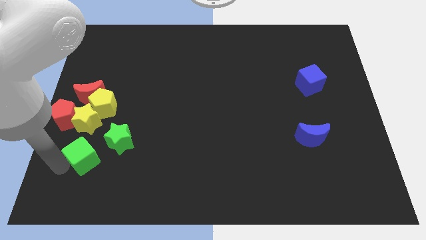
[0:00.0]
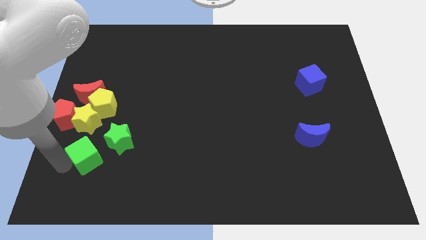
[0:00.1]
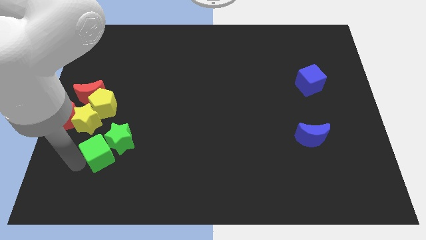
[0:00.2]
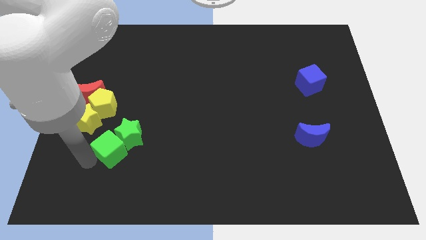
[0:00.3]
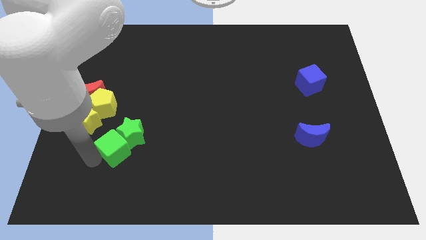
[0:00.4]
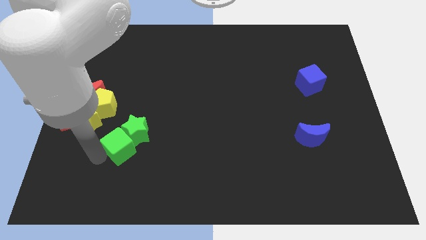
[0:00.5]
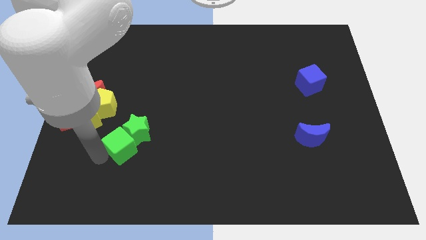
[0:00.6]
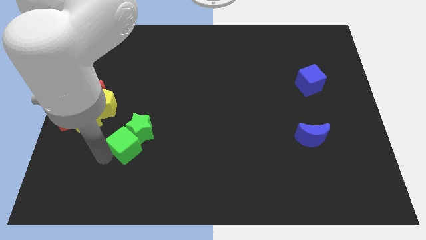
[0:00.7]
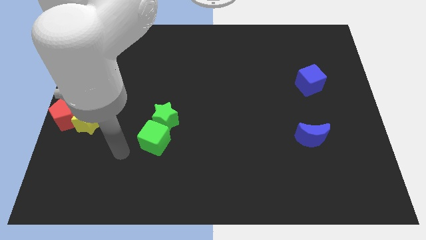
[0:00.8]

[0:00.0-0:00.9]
push the green cube into the green star

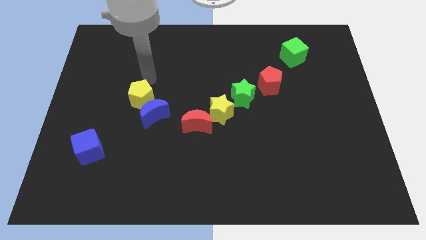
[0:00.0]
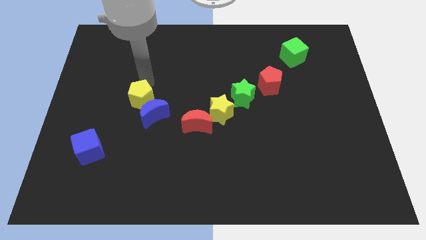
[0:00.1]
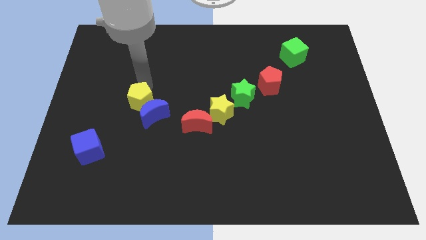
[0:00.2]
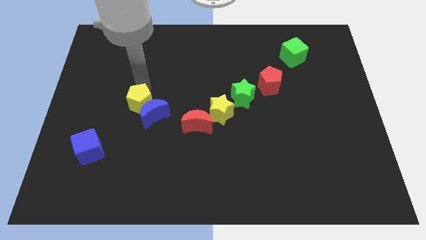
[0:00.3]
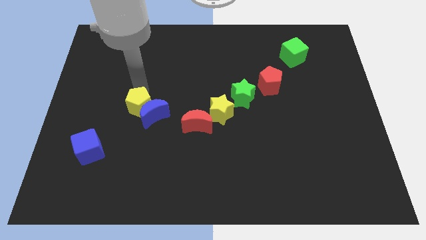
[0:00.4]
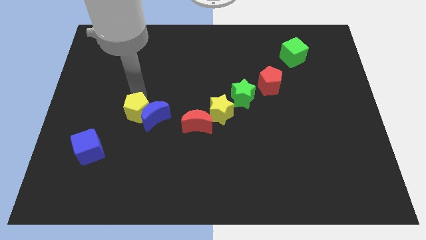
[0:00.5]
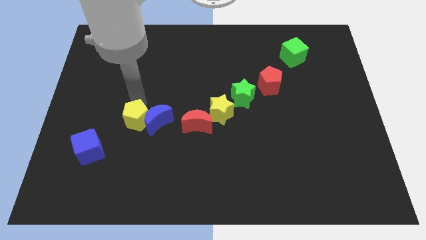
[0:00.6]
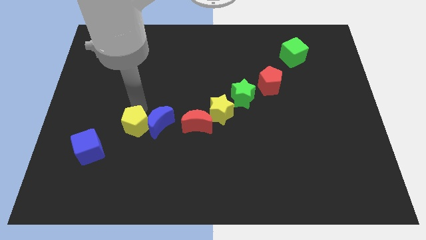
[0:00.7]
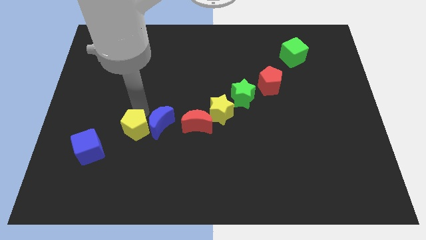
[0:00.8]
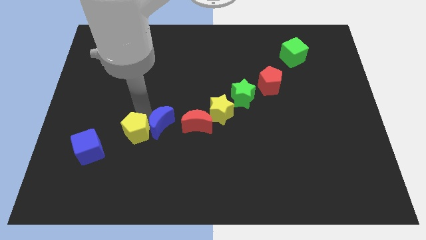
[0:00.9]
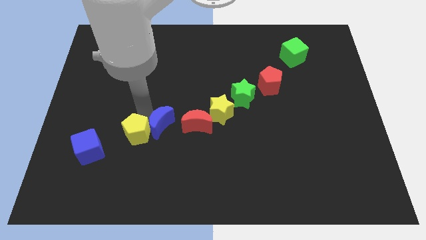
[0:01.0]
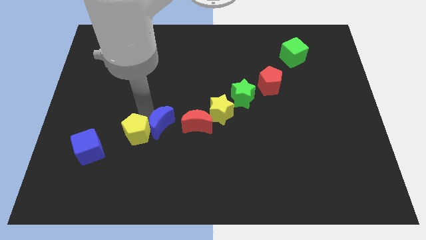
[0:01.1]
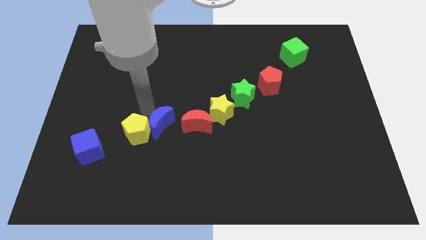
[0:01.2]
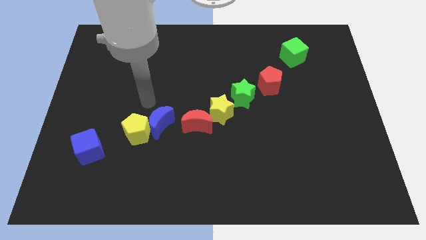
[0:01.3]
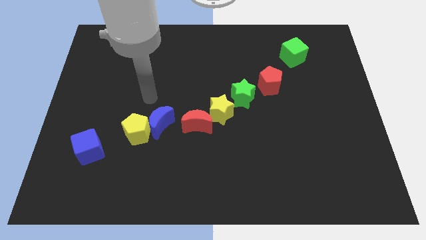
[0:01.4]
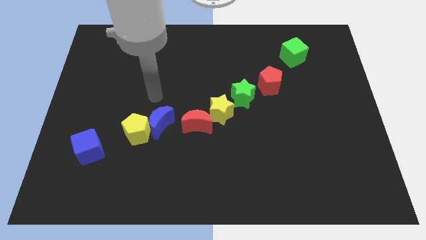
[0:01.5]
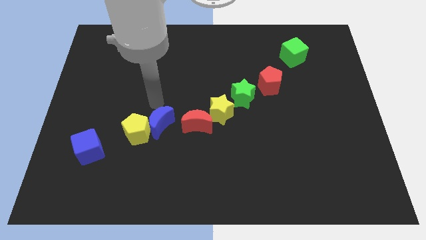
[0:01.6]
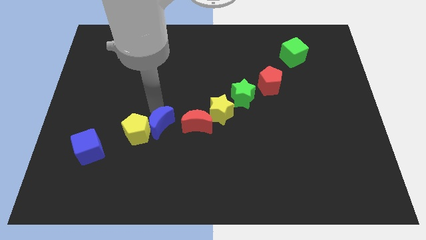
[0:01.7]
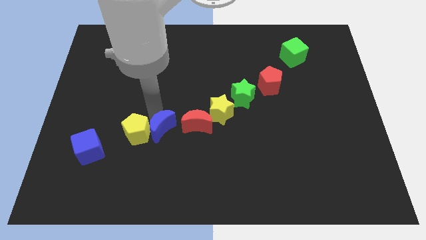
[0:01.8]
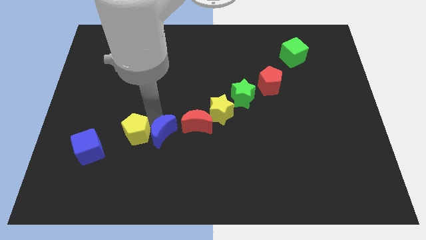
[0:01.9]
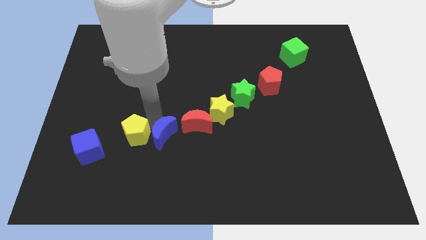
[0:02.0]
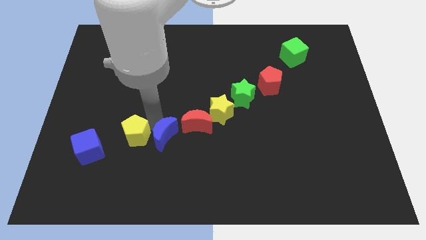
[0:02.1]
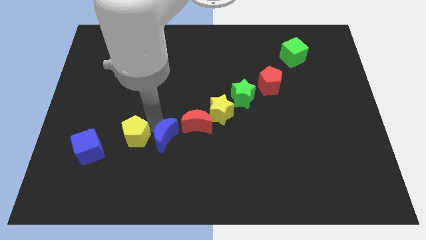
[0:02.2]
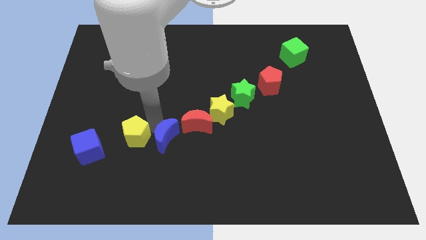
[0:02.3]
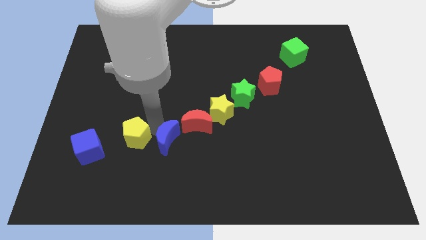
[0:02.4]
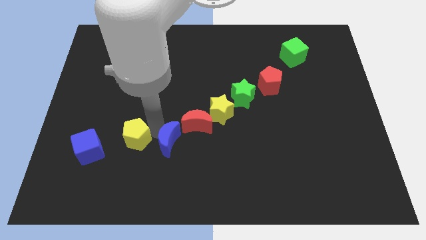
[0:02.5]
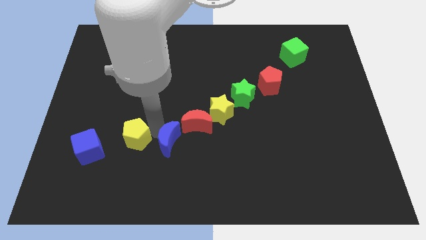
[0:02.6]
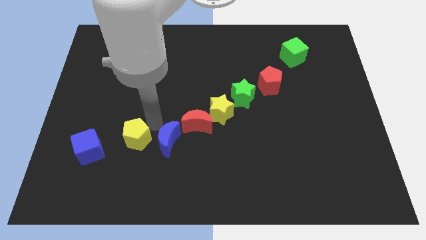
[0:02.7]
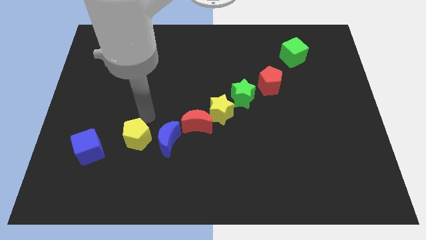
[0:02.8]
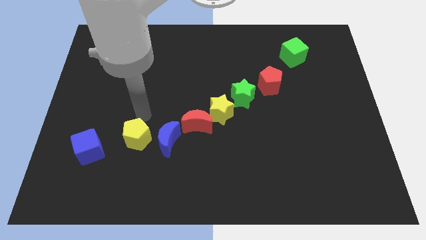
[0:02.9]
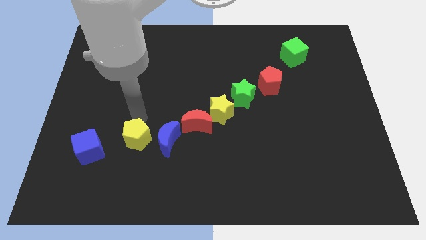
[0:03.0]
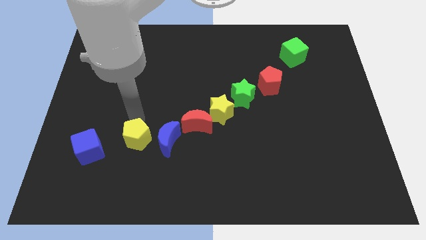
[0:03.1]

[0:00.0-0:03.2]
separate the yellow pentagon and the blue crescent

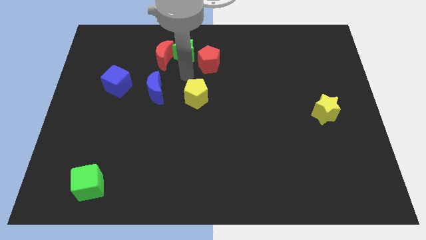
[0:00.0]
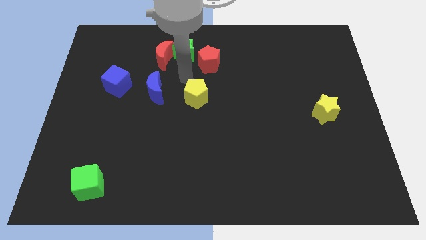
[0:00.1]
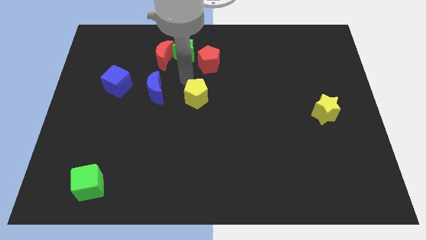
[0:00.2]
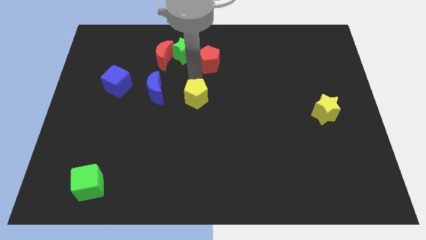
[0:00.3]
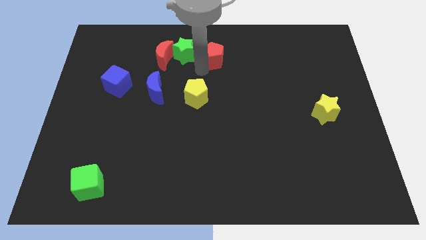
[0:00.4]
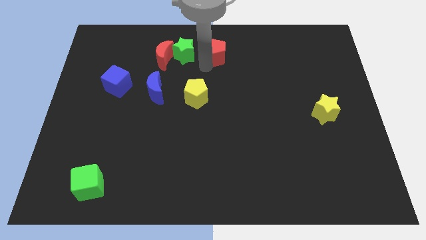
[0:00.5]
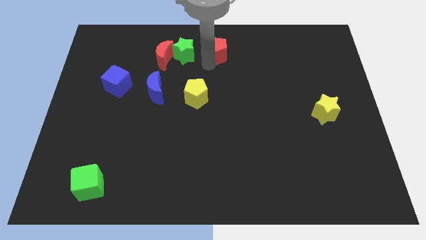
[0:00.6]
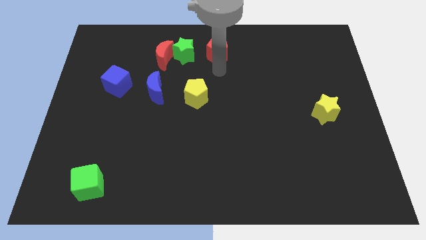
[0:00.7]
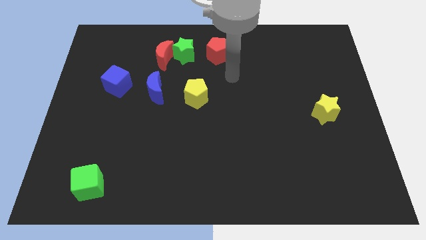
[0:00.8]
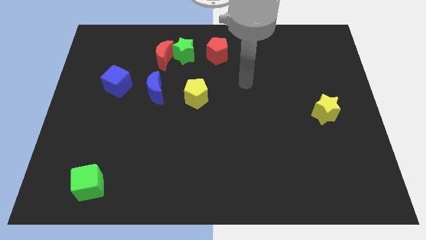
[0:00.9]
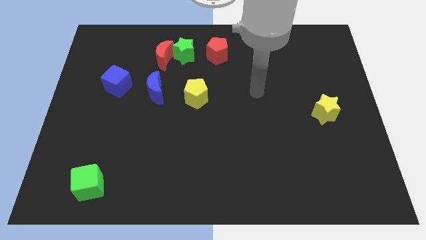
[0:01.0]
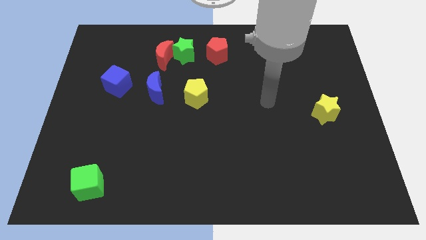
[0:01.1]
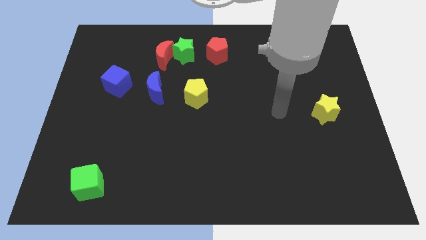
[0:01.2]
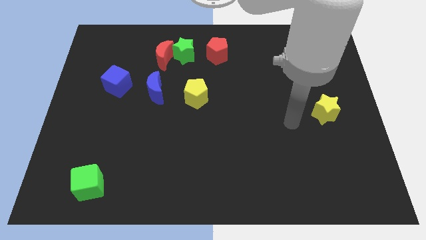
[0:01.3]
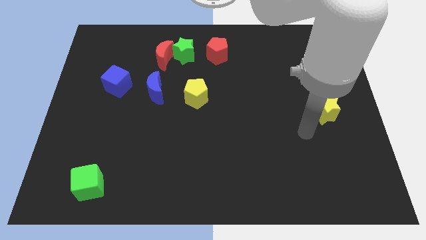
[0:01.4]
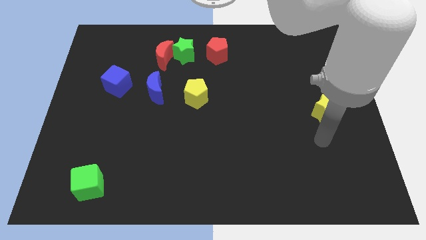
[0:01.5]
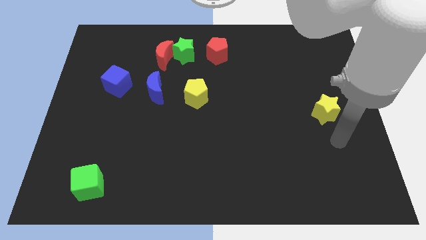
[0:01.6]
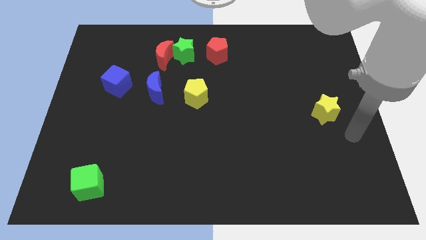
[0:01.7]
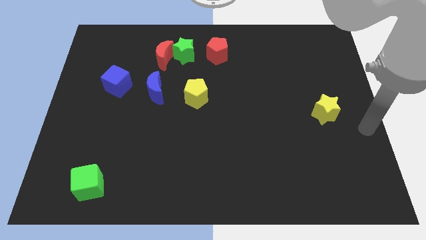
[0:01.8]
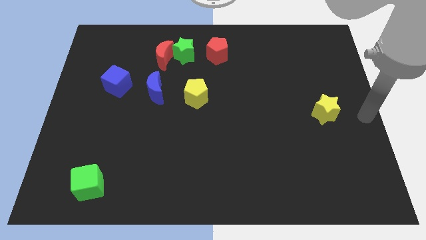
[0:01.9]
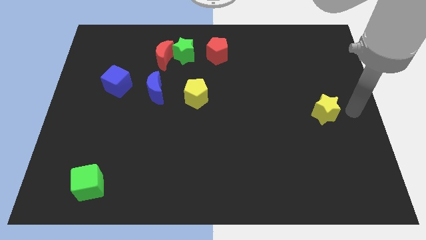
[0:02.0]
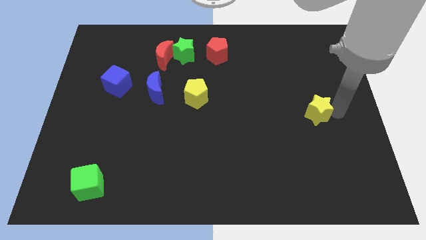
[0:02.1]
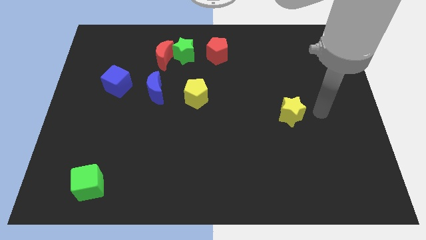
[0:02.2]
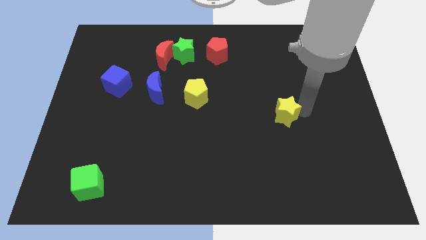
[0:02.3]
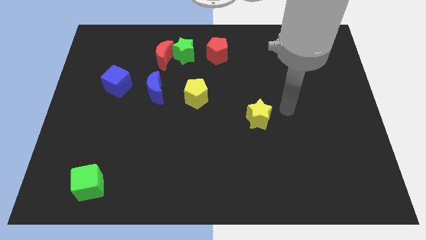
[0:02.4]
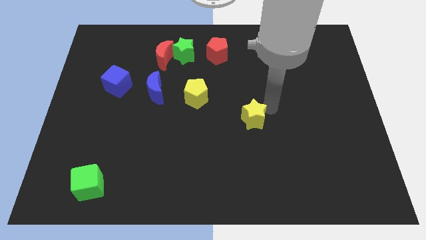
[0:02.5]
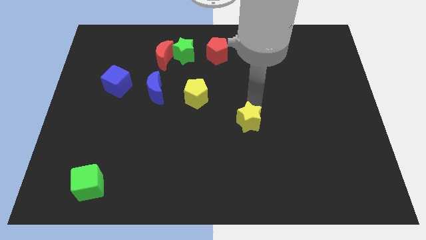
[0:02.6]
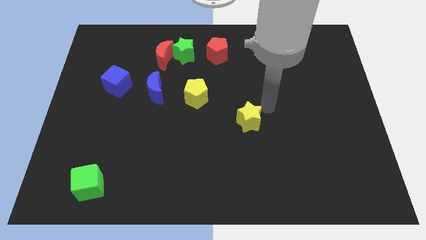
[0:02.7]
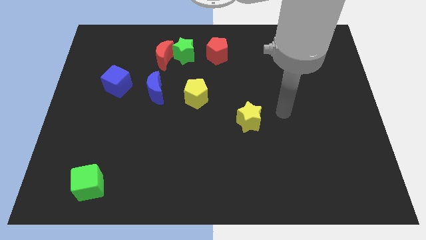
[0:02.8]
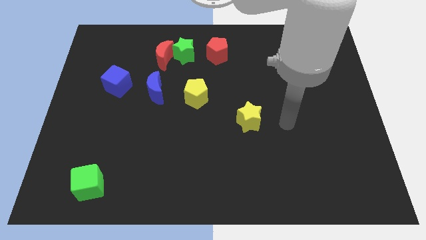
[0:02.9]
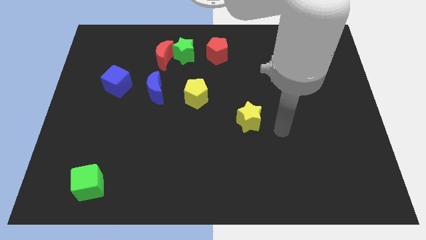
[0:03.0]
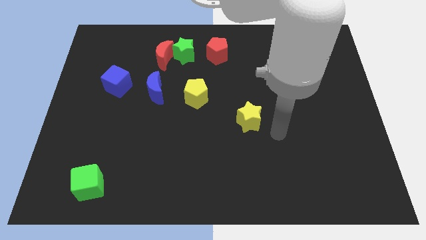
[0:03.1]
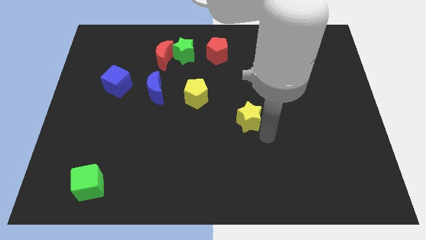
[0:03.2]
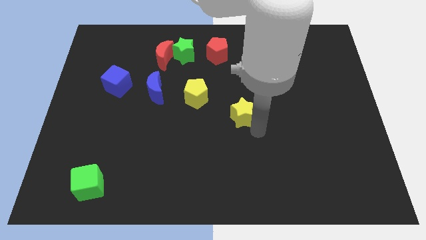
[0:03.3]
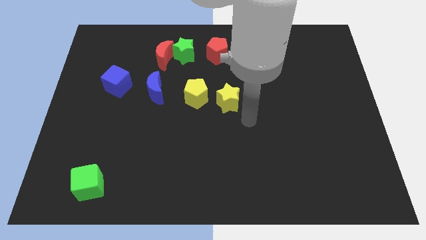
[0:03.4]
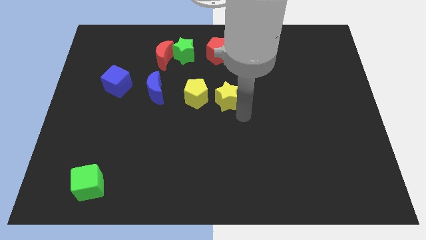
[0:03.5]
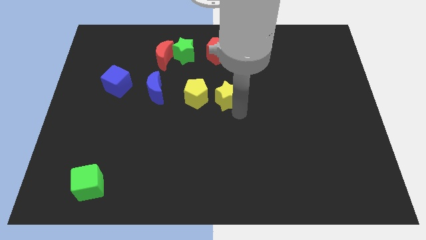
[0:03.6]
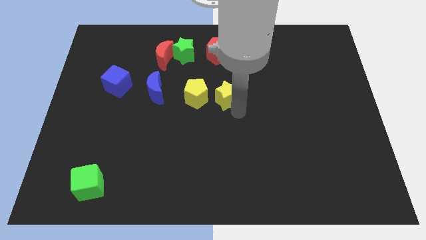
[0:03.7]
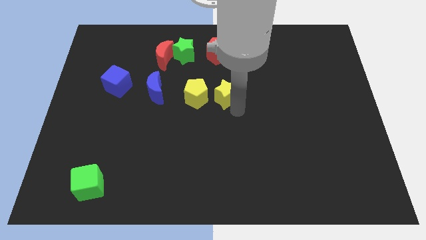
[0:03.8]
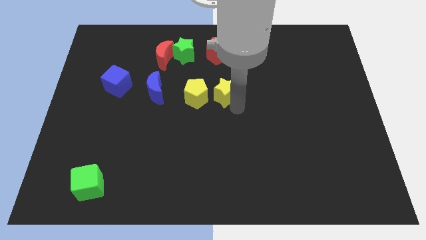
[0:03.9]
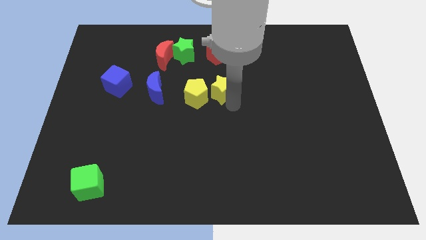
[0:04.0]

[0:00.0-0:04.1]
place the yellow star close to the right of the yellow pentagon

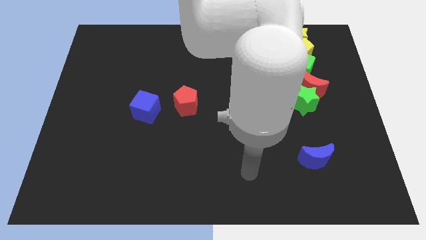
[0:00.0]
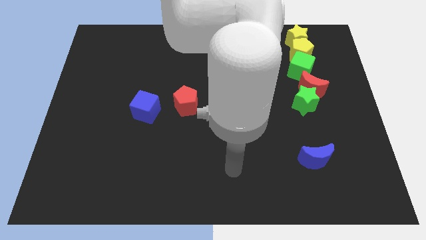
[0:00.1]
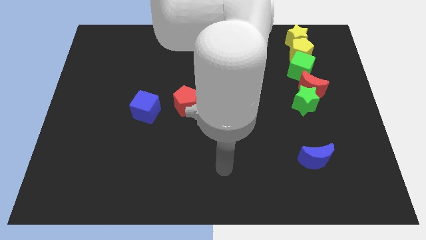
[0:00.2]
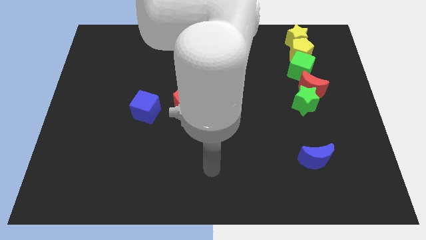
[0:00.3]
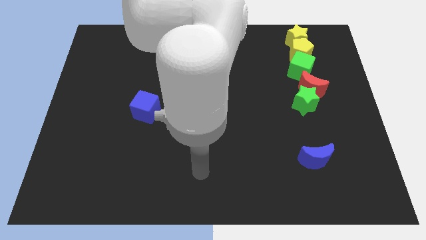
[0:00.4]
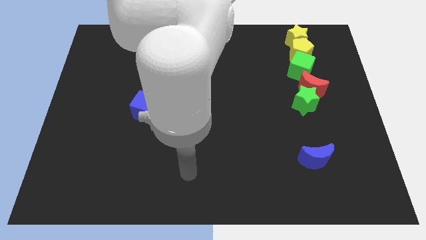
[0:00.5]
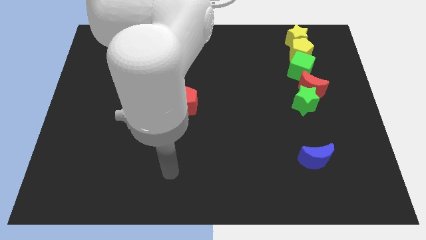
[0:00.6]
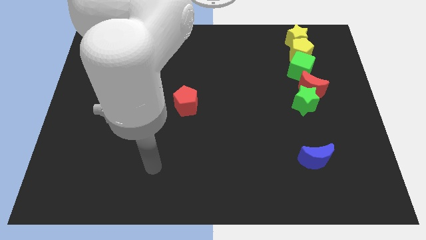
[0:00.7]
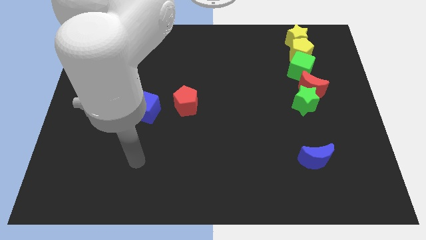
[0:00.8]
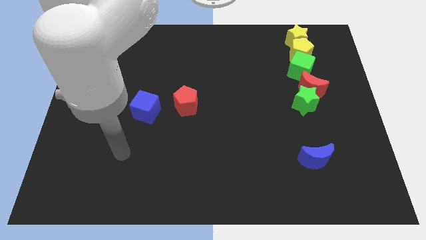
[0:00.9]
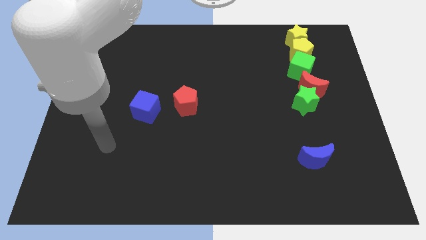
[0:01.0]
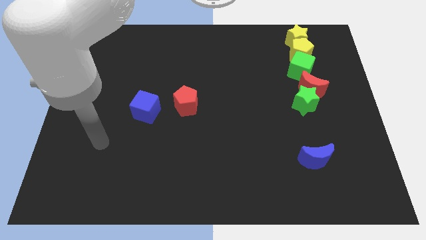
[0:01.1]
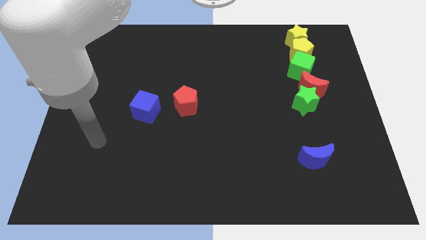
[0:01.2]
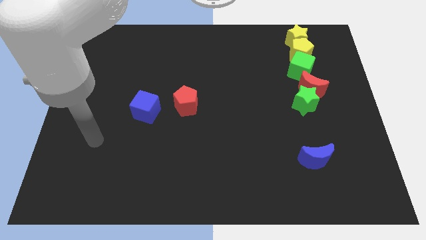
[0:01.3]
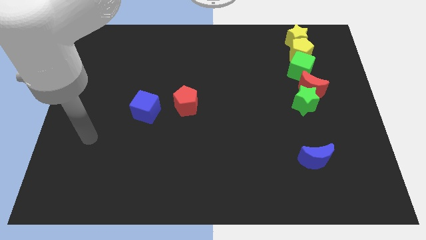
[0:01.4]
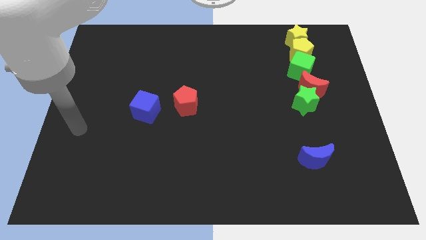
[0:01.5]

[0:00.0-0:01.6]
move yourself away from the blue moon
